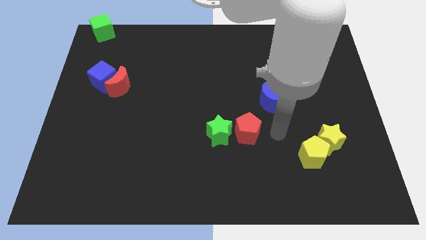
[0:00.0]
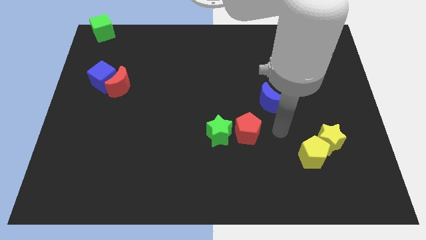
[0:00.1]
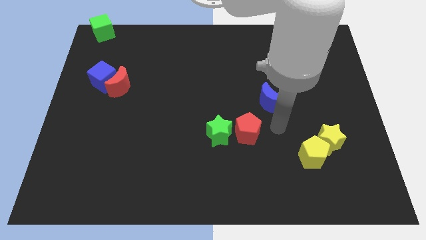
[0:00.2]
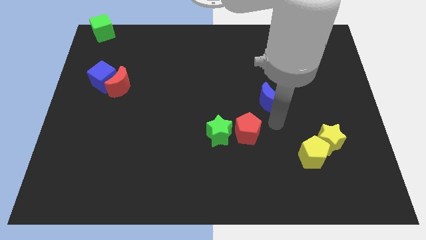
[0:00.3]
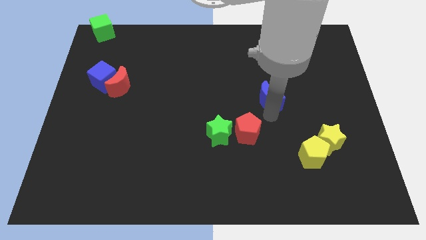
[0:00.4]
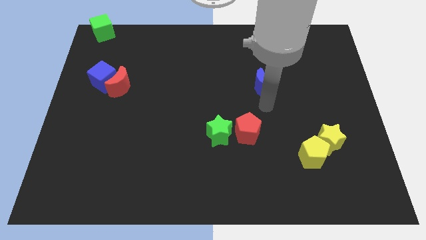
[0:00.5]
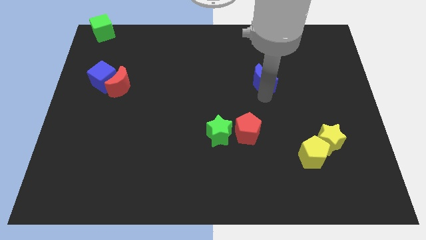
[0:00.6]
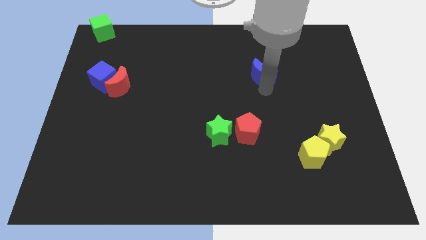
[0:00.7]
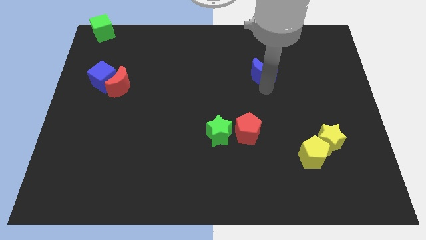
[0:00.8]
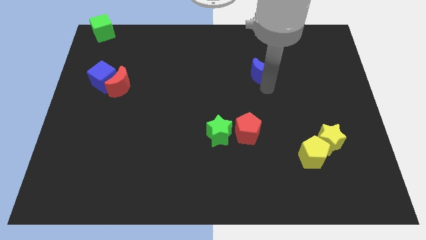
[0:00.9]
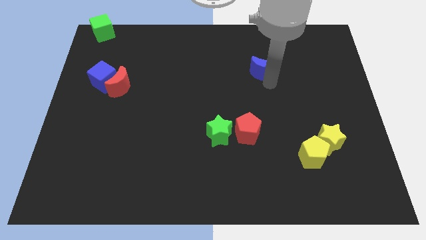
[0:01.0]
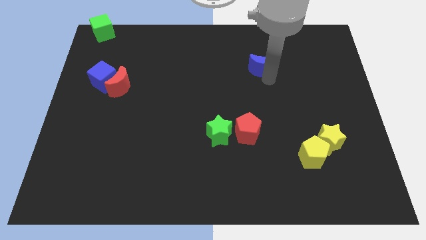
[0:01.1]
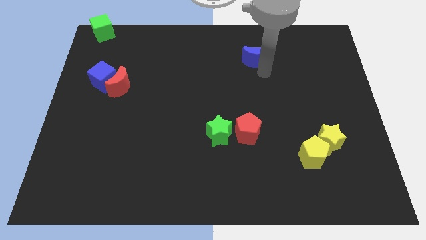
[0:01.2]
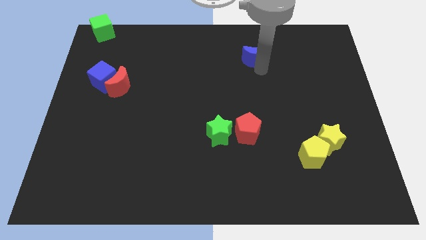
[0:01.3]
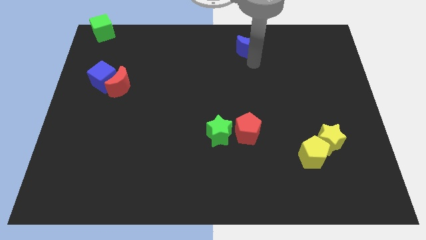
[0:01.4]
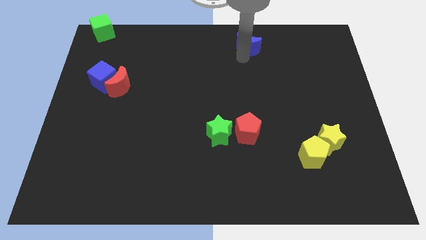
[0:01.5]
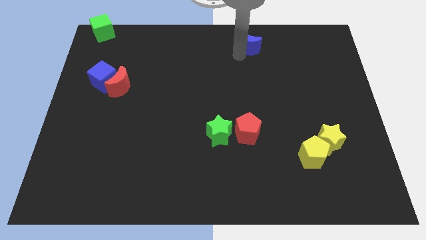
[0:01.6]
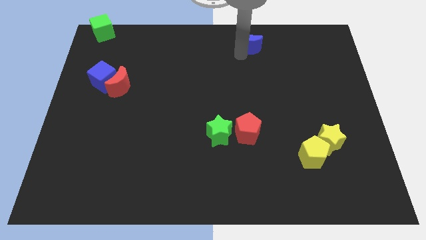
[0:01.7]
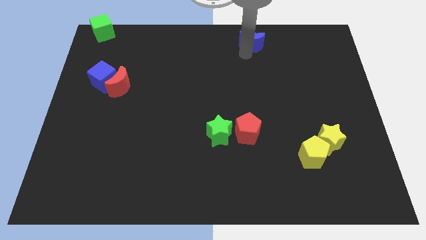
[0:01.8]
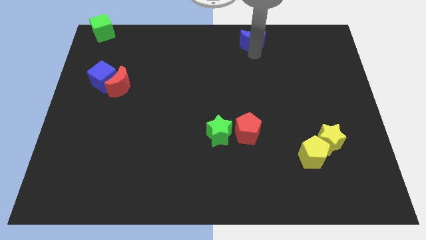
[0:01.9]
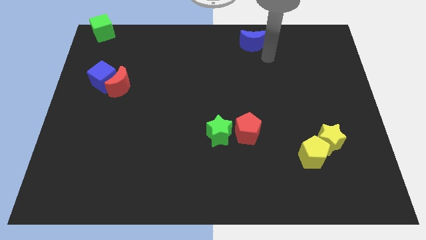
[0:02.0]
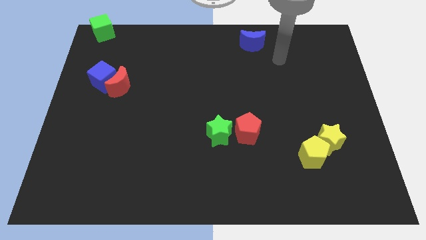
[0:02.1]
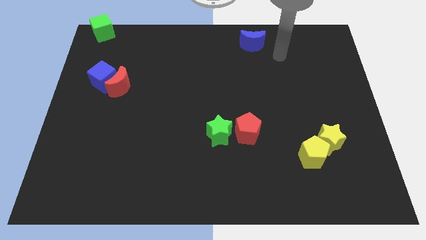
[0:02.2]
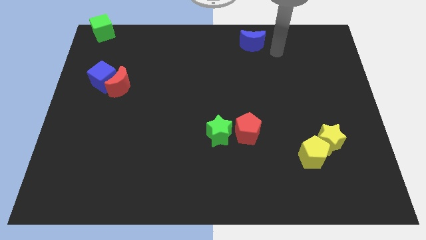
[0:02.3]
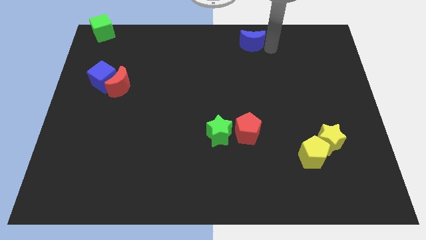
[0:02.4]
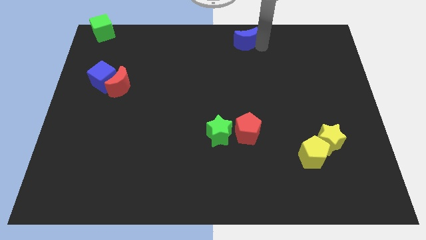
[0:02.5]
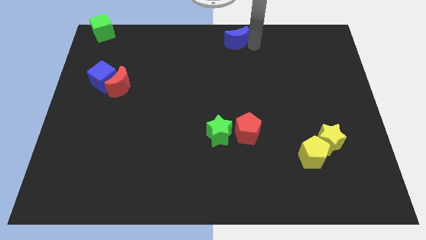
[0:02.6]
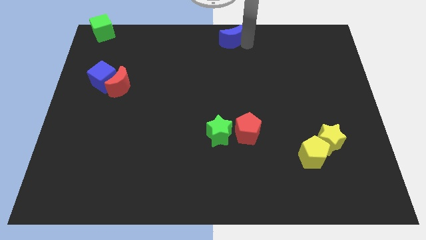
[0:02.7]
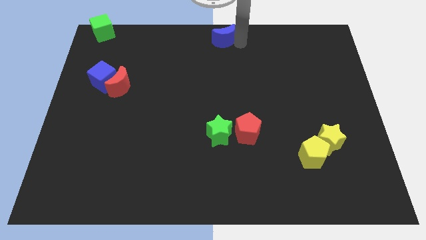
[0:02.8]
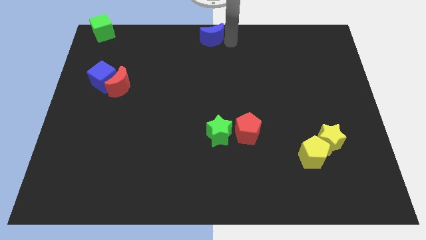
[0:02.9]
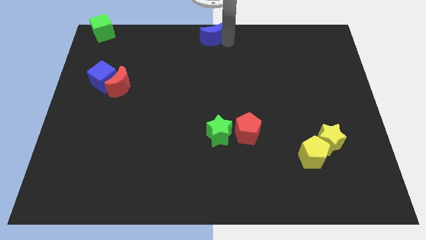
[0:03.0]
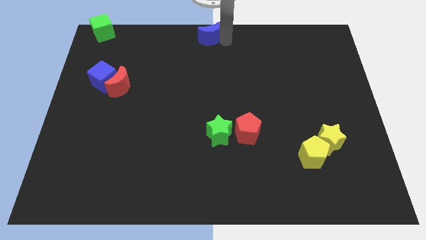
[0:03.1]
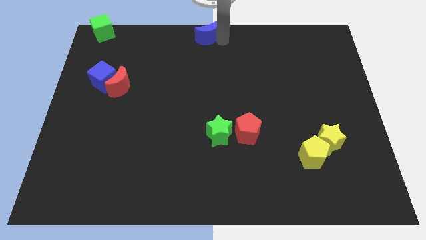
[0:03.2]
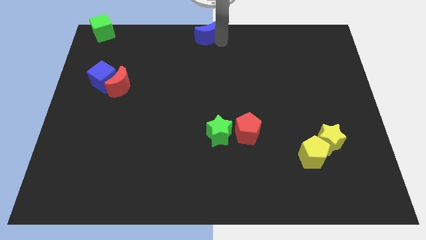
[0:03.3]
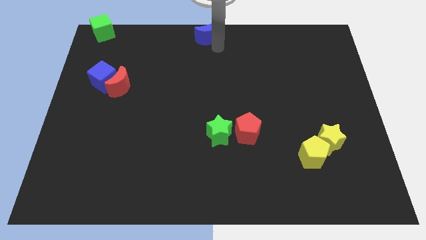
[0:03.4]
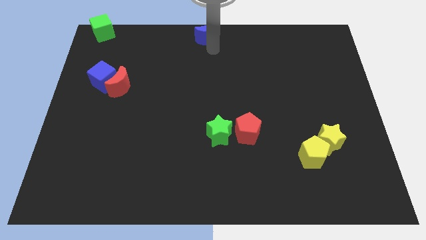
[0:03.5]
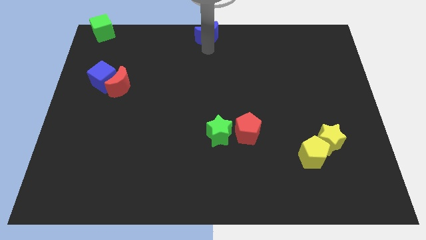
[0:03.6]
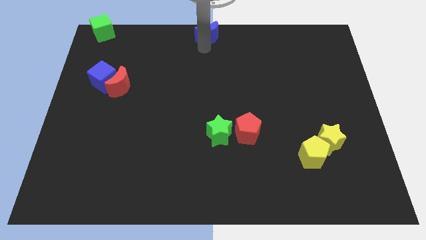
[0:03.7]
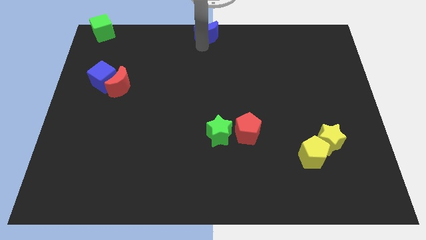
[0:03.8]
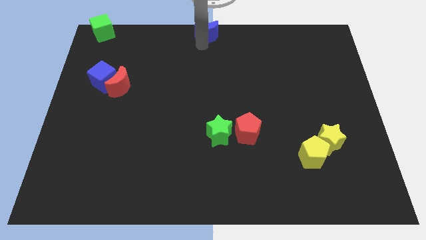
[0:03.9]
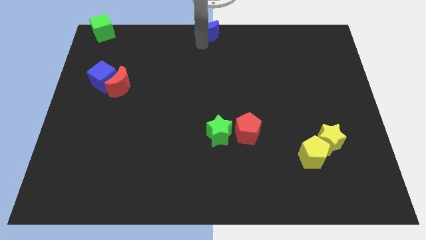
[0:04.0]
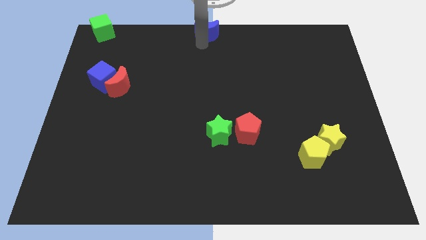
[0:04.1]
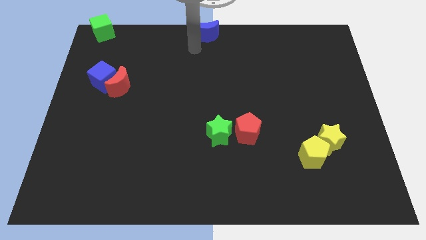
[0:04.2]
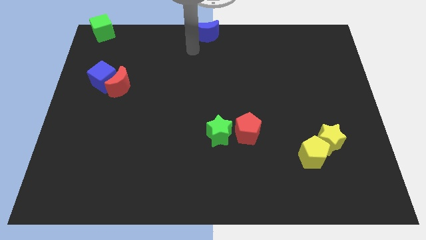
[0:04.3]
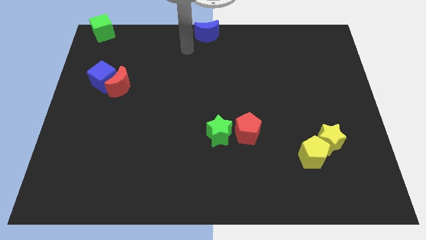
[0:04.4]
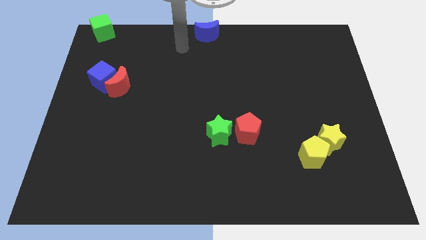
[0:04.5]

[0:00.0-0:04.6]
place the blue crescent at the top center of the board

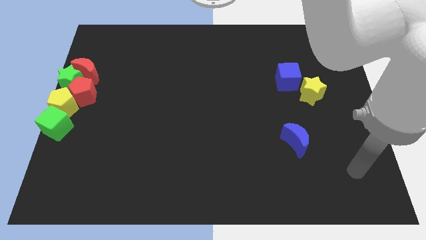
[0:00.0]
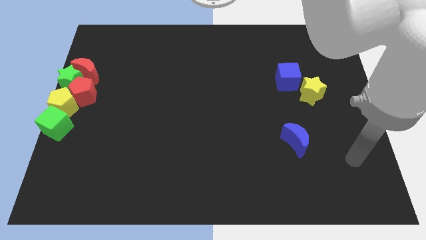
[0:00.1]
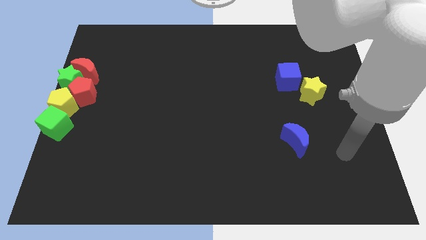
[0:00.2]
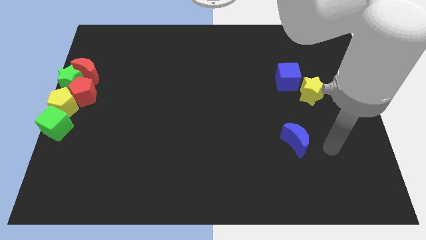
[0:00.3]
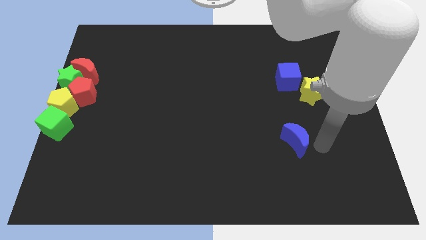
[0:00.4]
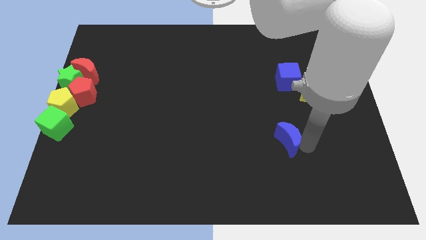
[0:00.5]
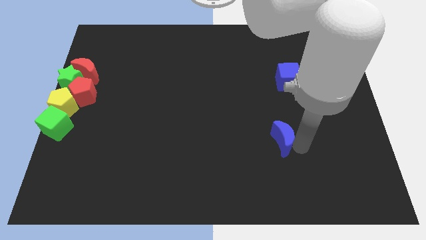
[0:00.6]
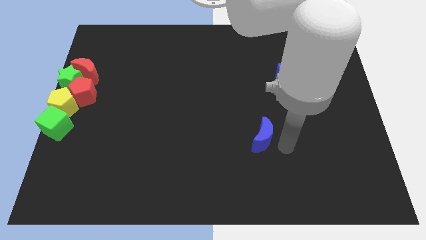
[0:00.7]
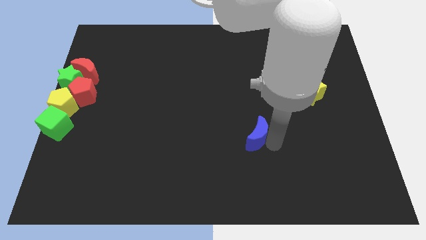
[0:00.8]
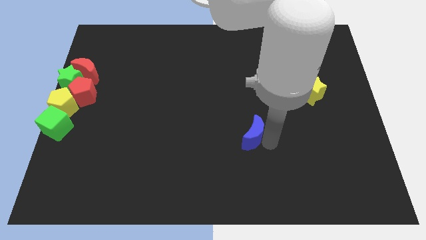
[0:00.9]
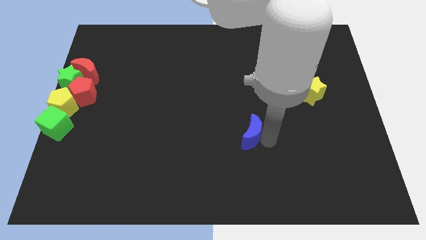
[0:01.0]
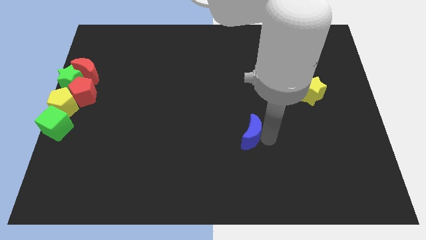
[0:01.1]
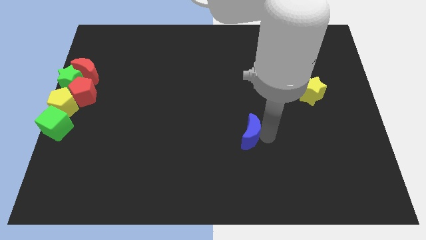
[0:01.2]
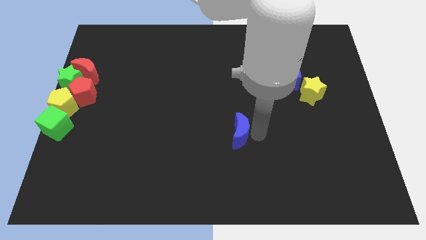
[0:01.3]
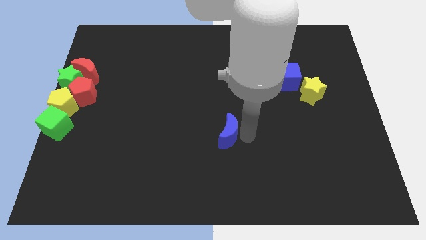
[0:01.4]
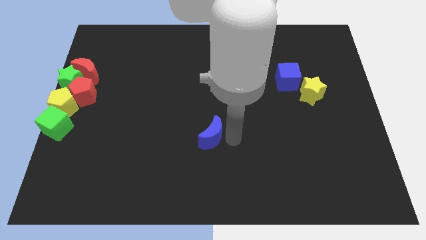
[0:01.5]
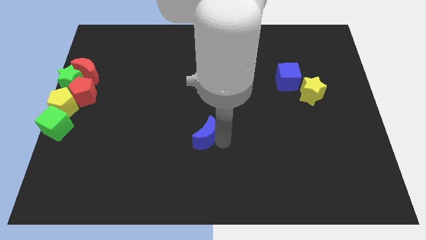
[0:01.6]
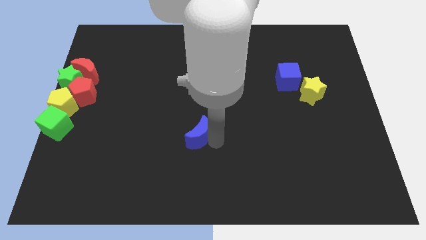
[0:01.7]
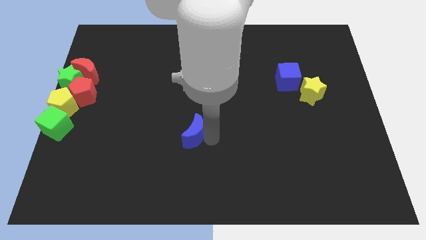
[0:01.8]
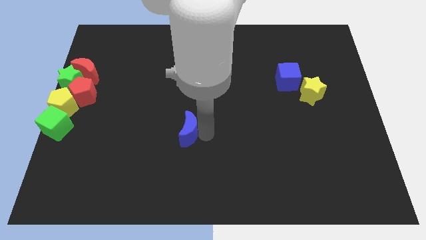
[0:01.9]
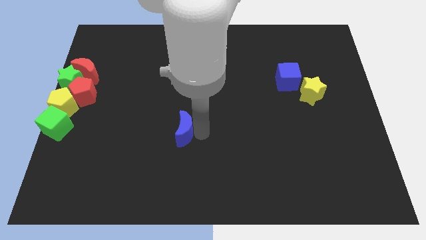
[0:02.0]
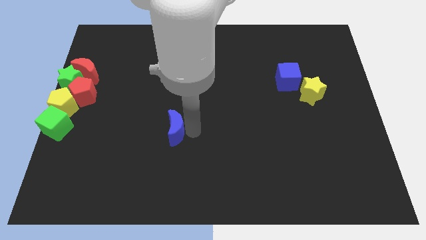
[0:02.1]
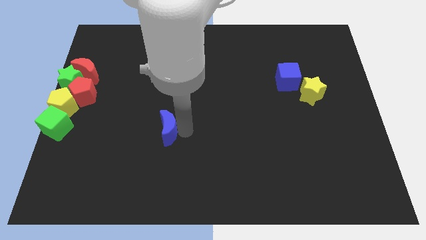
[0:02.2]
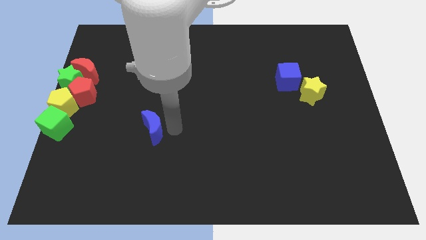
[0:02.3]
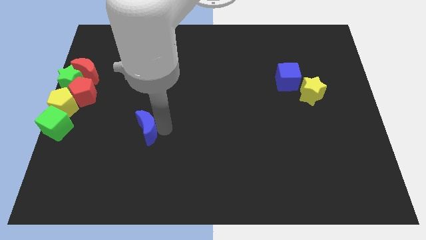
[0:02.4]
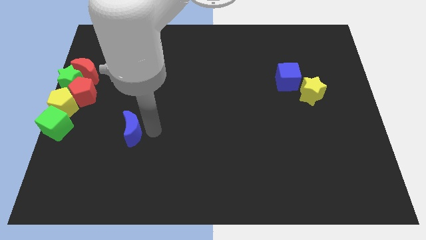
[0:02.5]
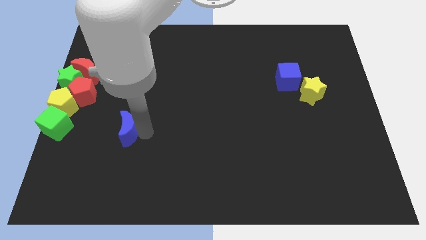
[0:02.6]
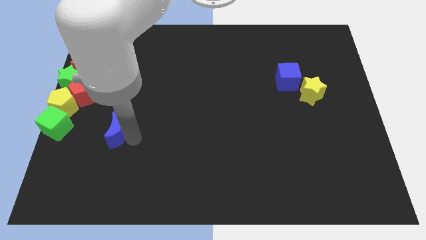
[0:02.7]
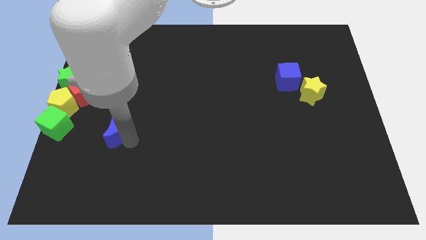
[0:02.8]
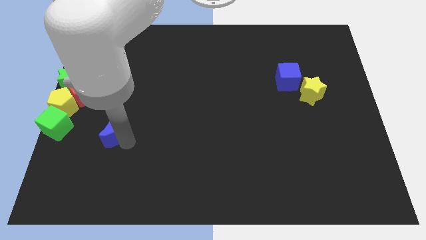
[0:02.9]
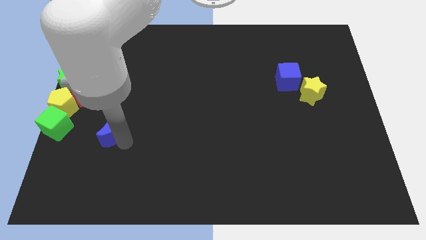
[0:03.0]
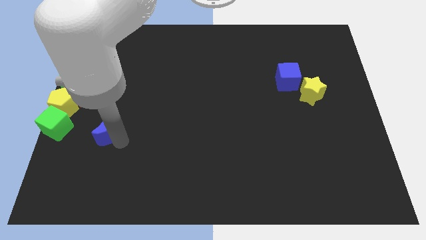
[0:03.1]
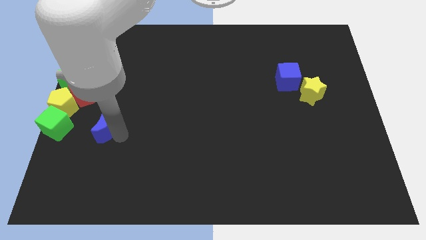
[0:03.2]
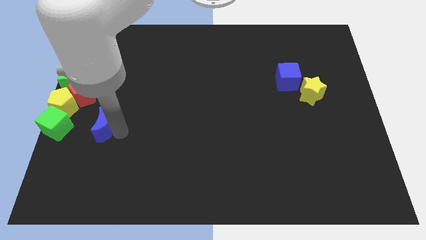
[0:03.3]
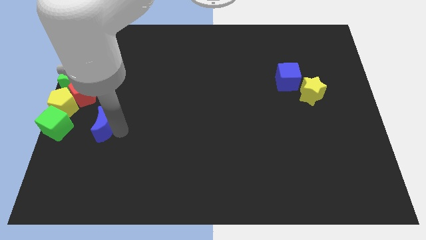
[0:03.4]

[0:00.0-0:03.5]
place the blue crescent right side to the green cube

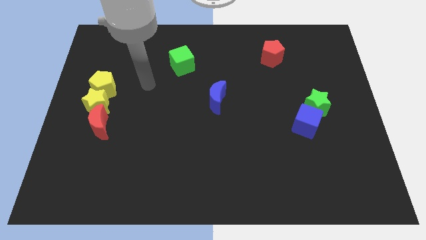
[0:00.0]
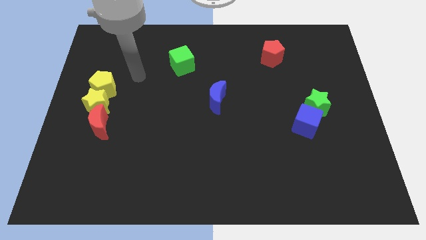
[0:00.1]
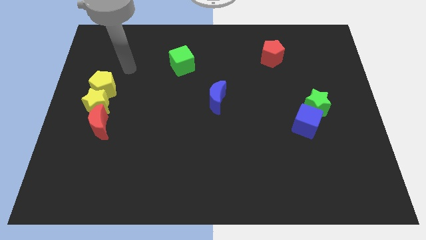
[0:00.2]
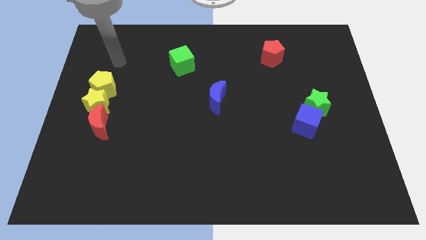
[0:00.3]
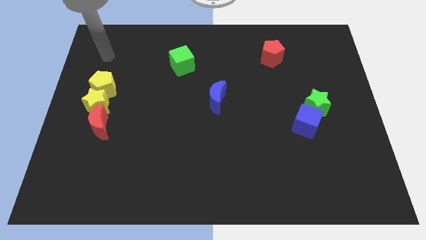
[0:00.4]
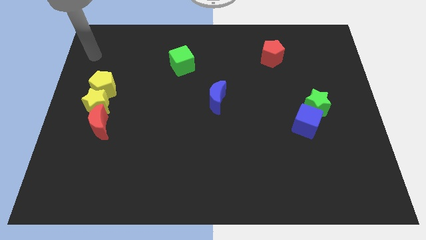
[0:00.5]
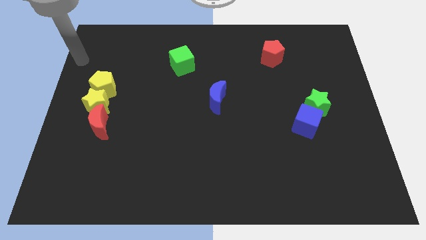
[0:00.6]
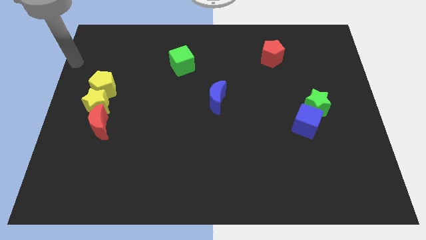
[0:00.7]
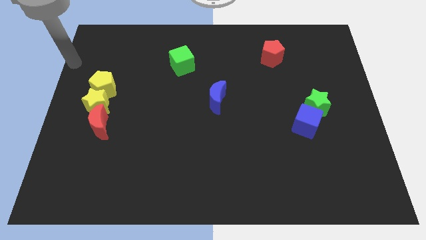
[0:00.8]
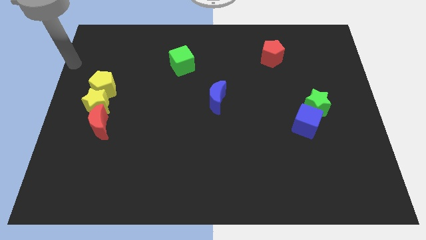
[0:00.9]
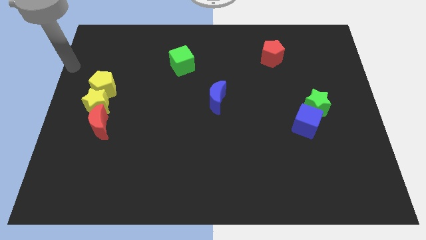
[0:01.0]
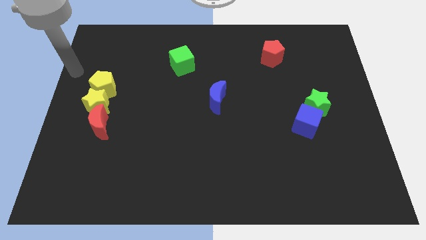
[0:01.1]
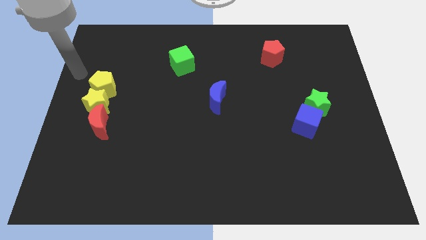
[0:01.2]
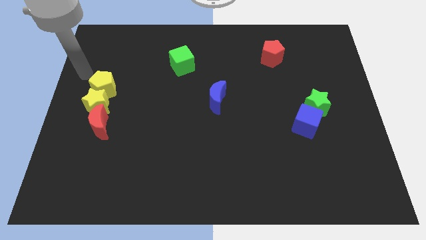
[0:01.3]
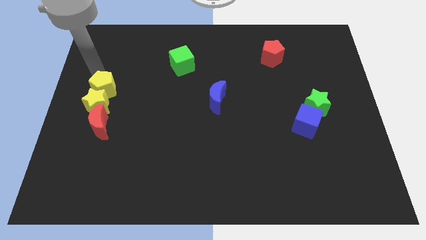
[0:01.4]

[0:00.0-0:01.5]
move the arm to the top of yellow pentagon
